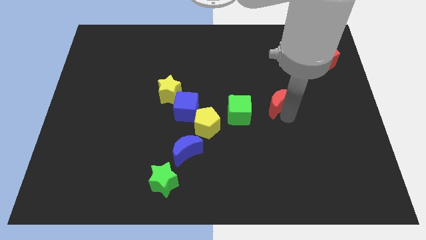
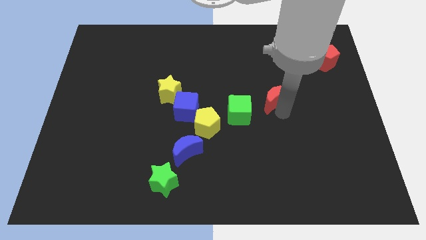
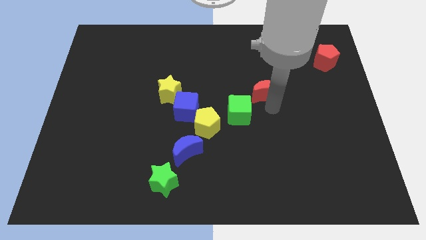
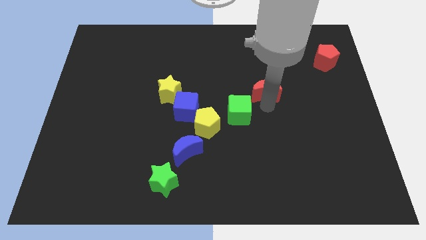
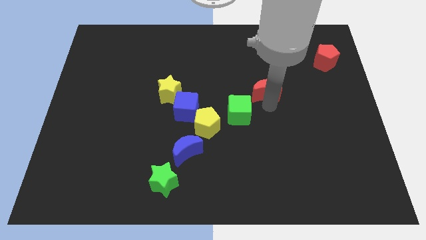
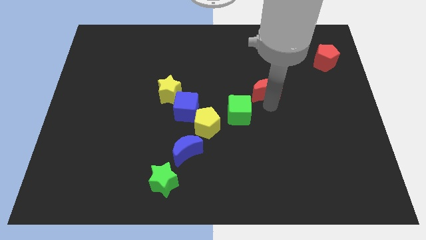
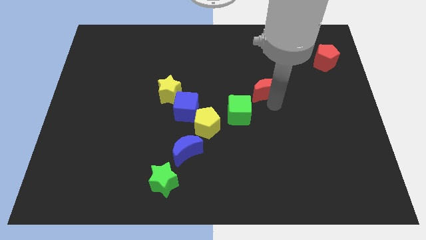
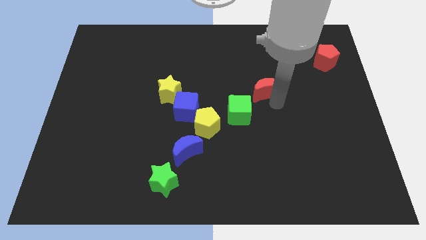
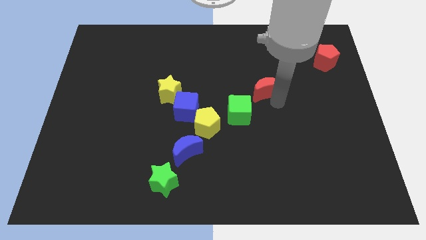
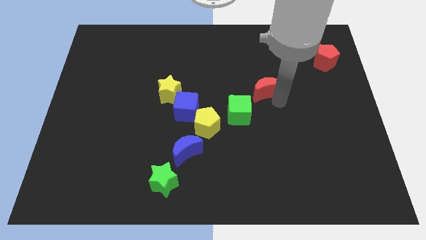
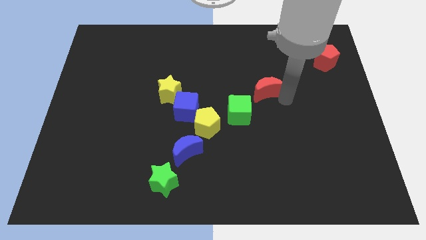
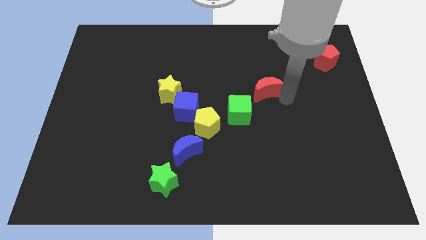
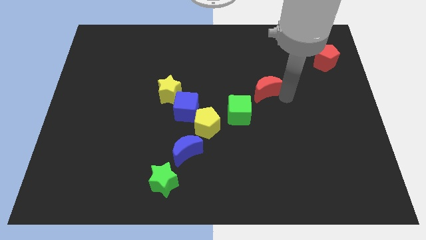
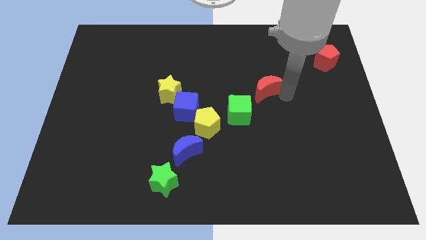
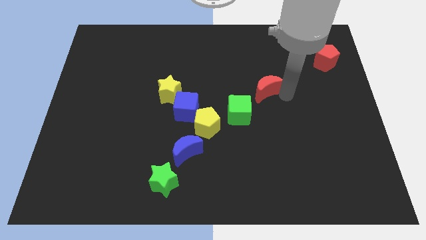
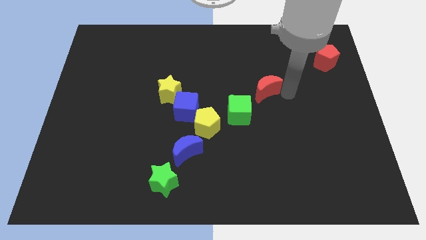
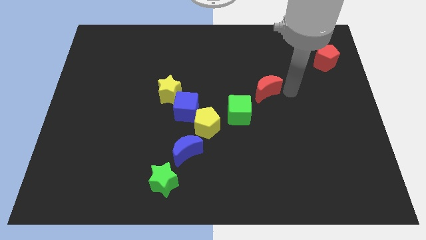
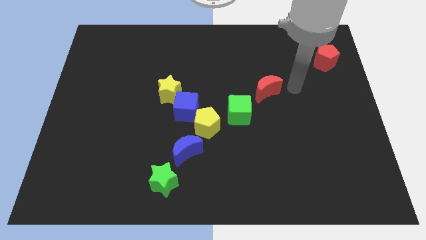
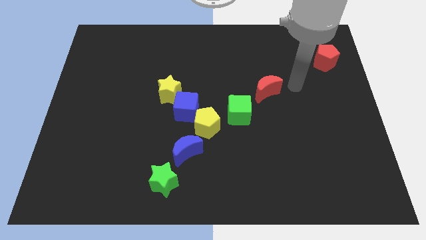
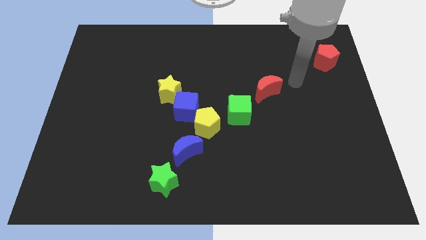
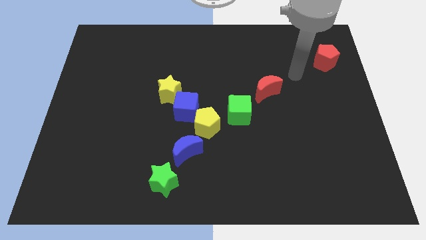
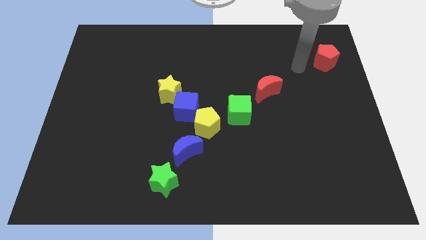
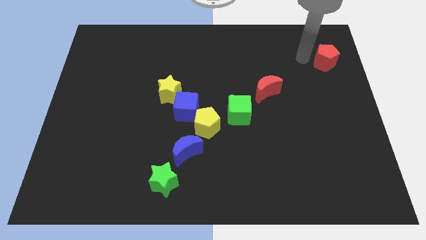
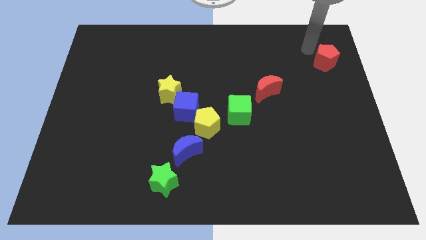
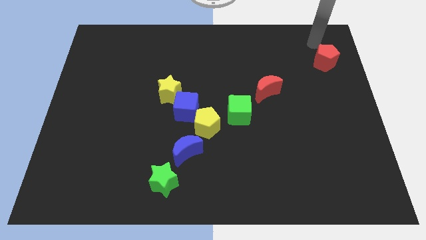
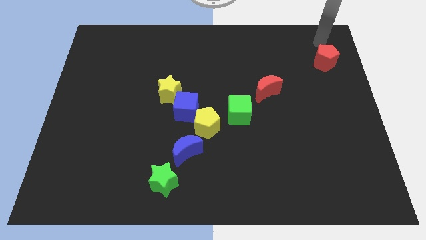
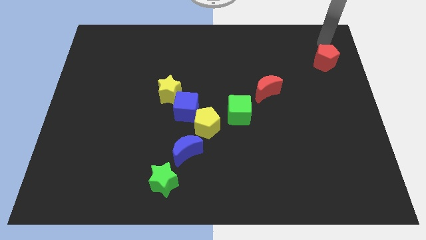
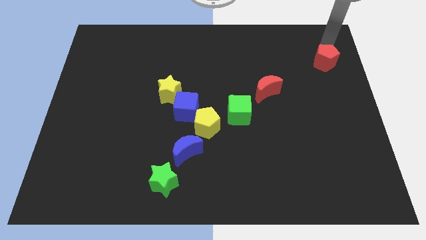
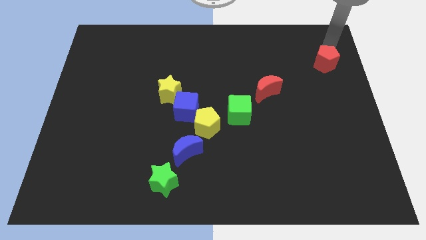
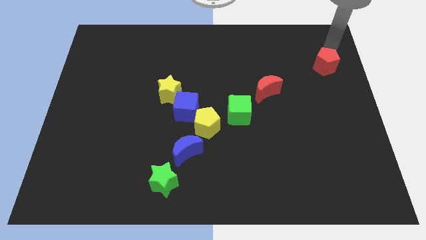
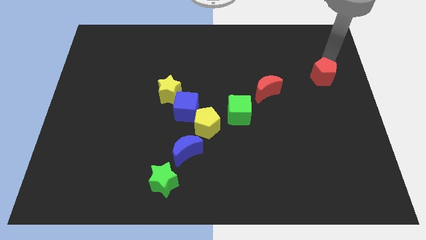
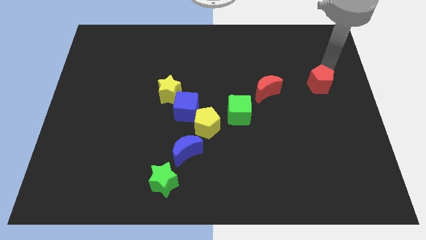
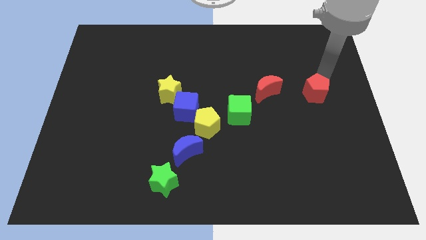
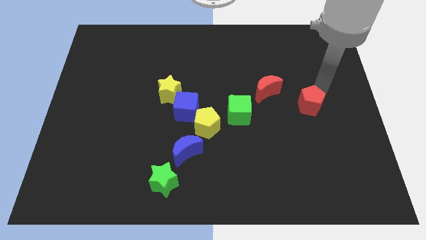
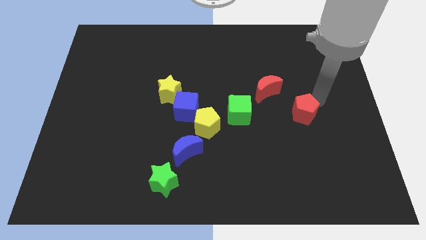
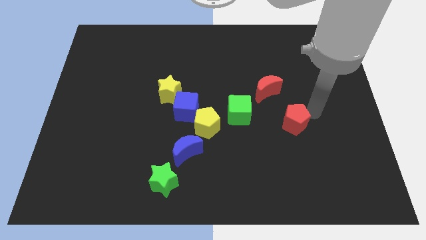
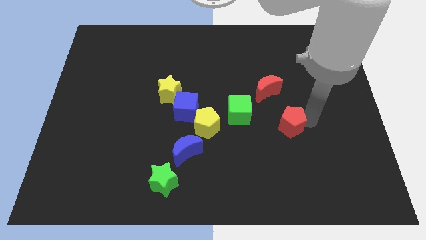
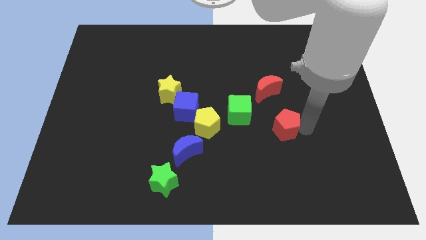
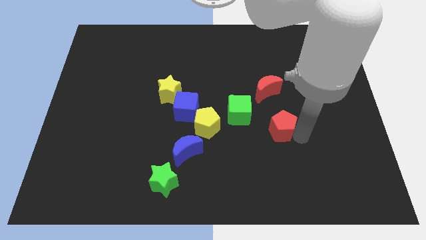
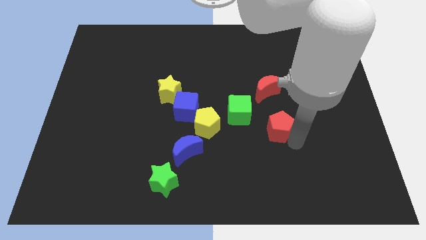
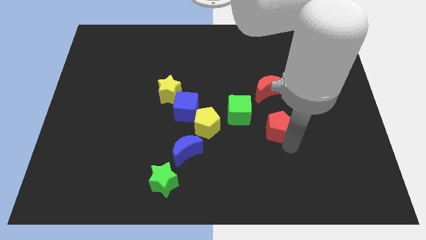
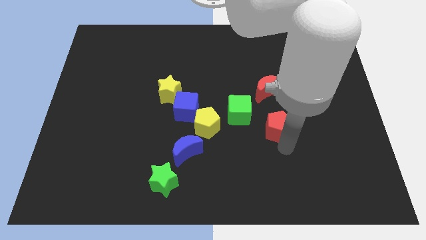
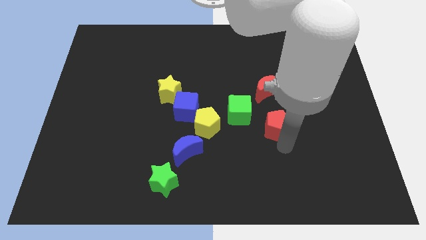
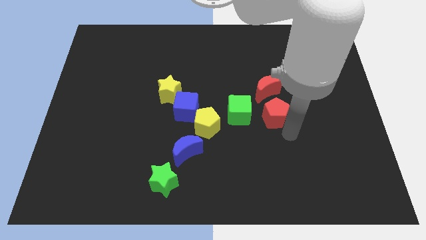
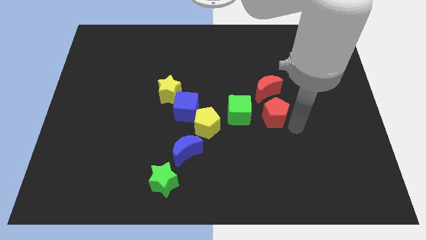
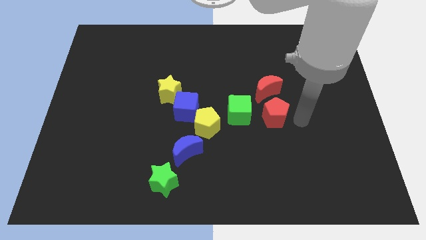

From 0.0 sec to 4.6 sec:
place the red pentagon down to the red moon

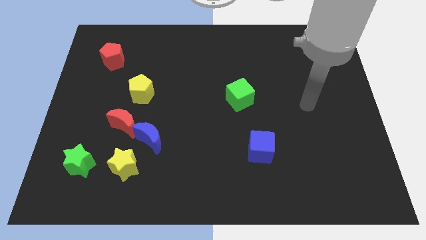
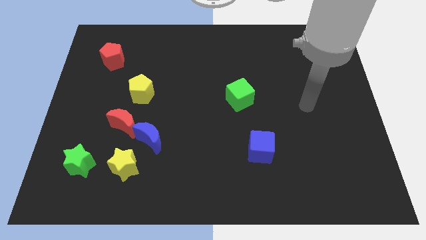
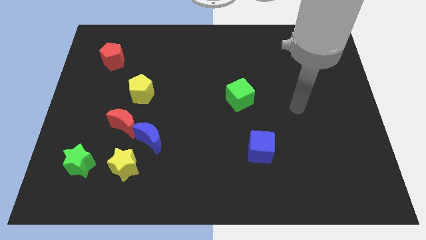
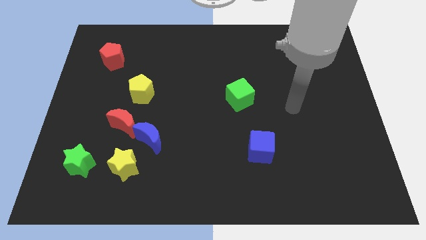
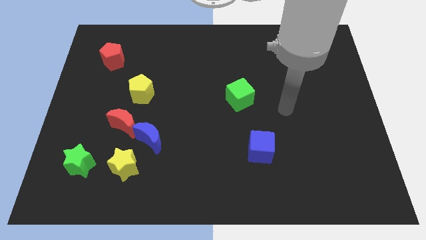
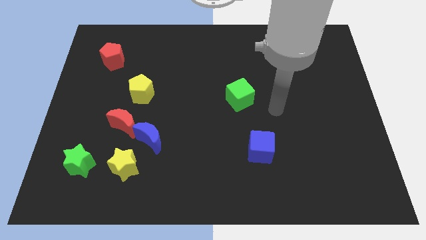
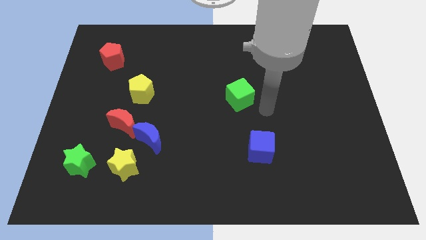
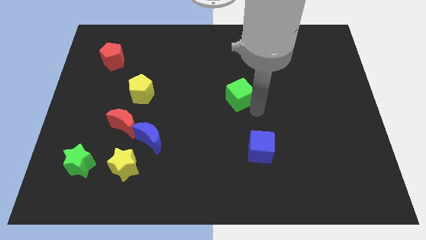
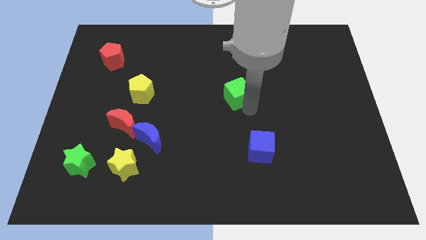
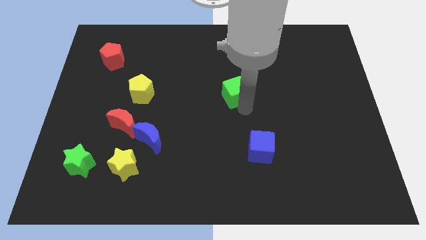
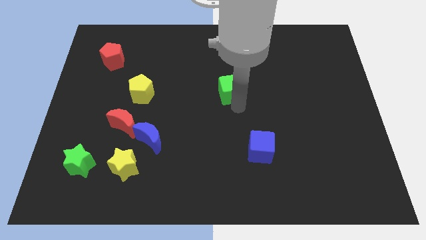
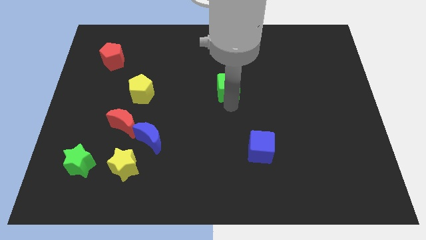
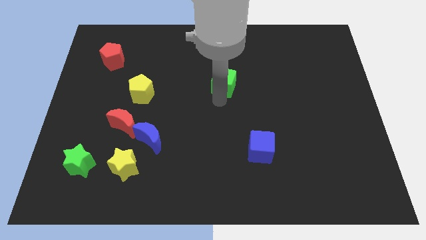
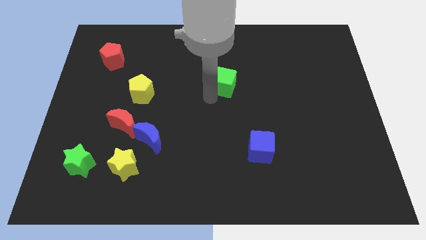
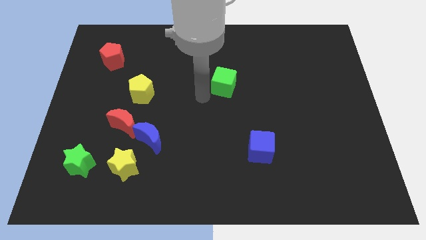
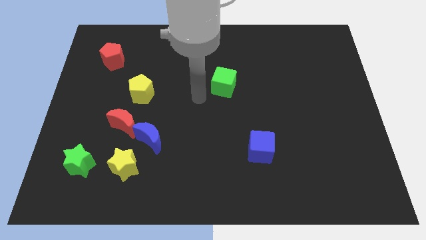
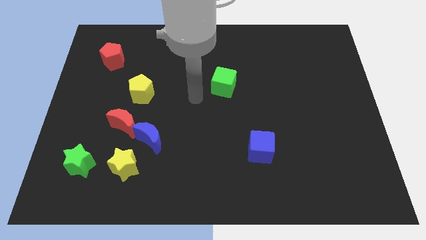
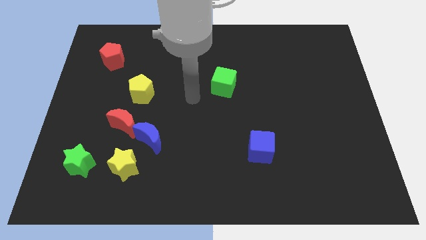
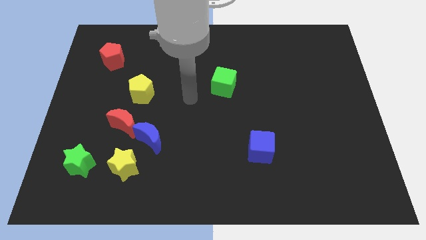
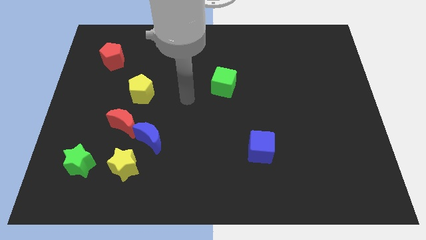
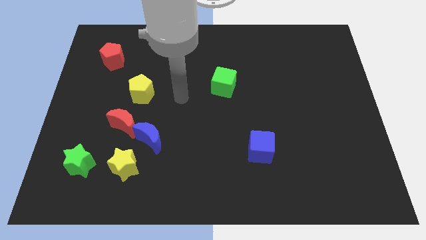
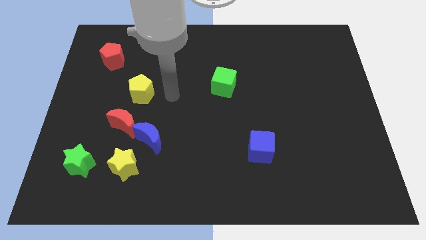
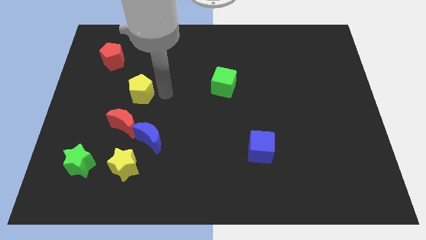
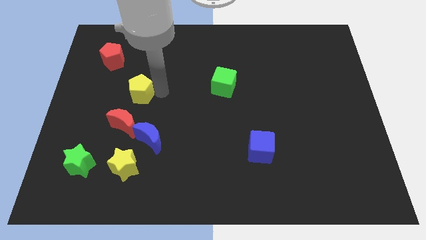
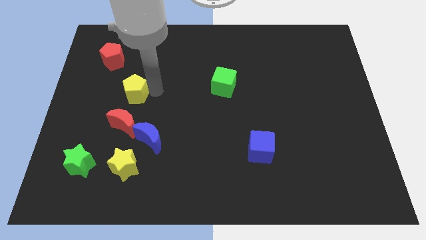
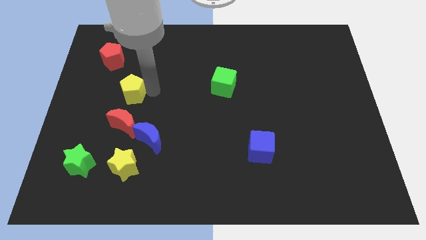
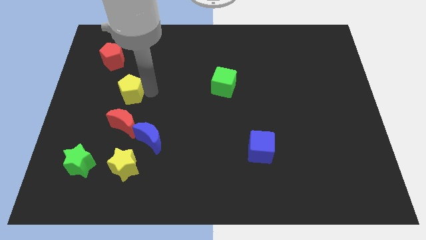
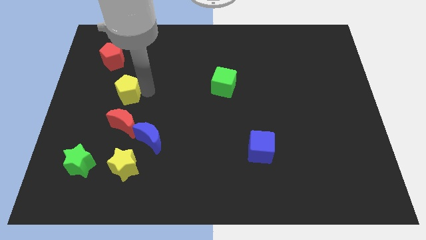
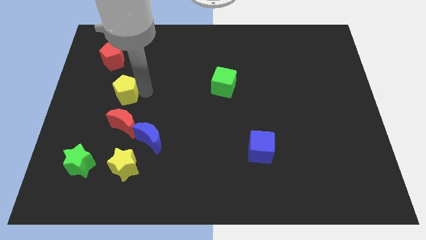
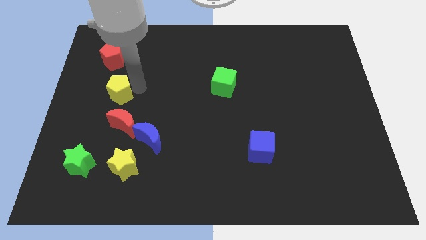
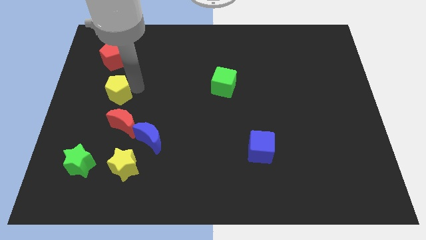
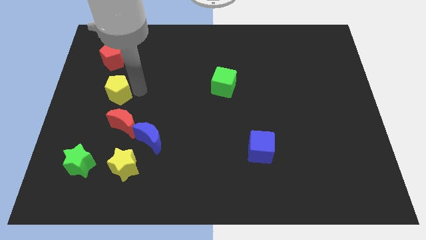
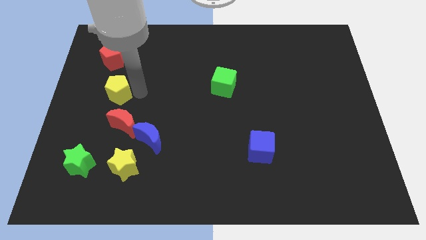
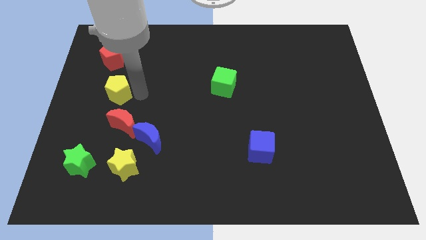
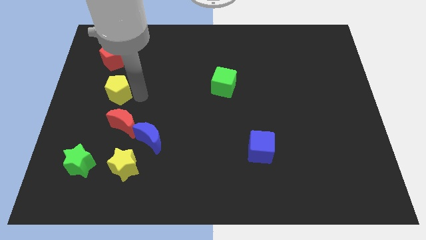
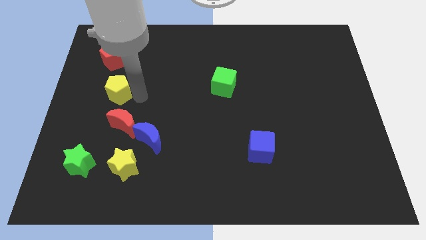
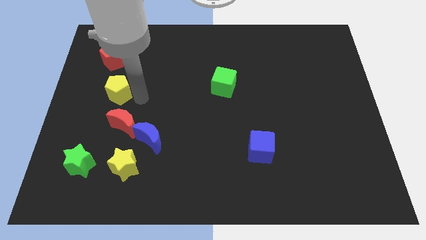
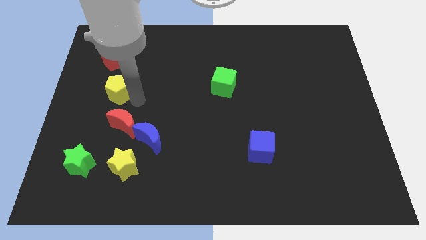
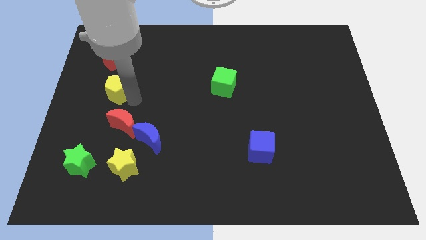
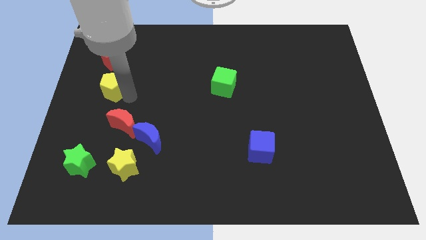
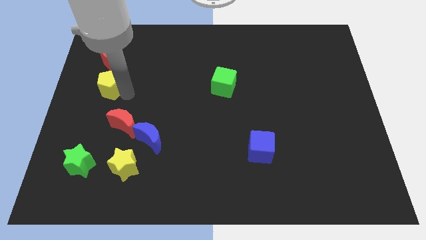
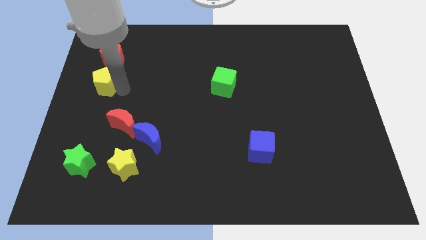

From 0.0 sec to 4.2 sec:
push the green cube and yellow pentagon slightly to the left side of the board
